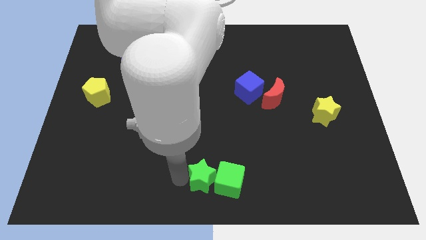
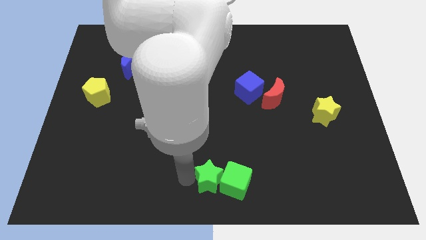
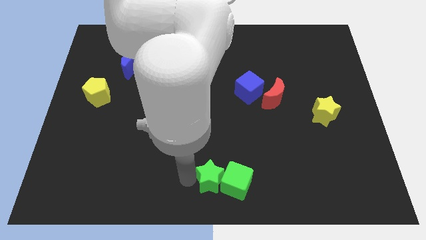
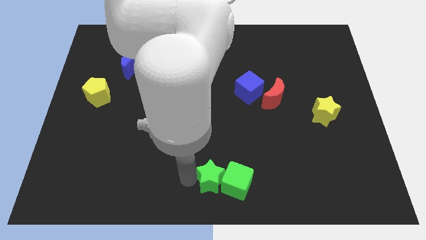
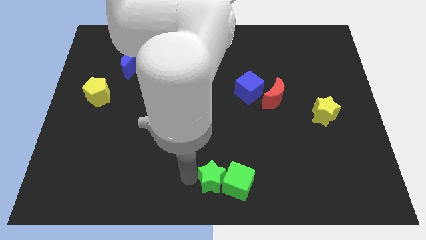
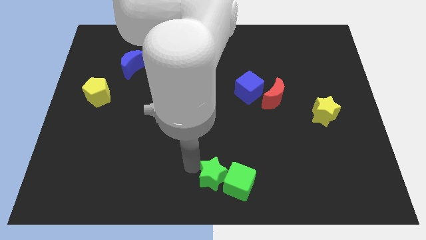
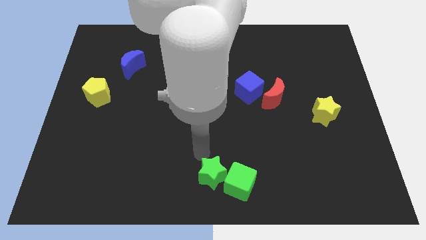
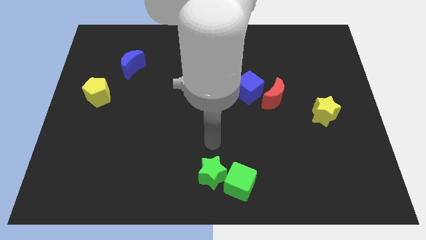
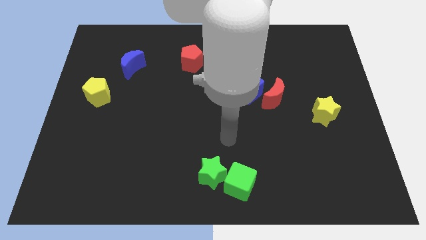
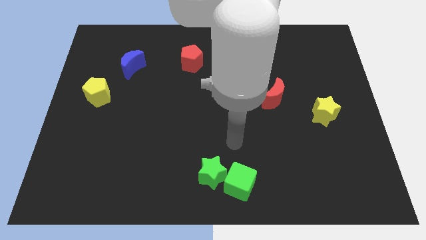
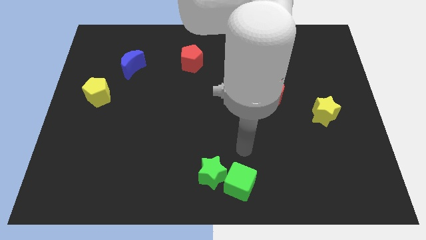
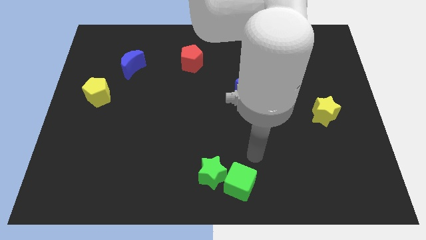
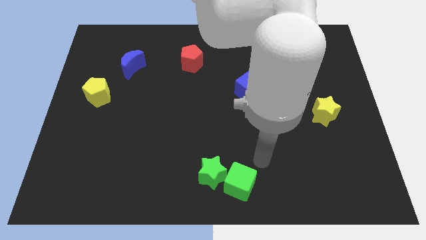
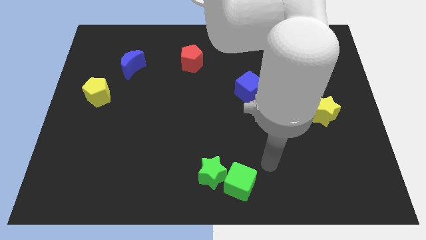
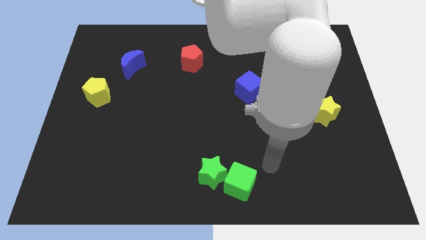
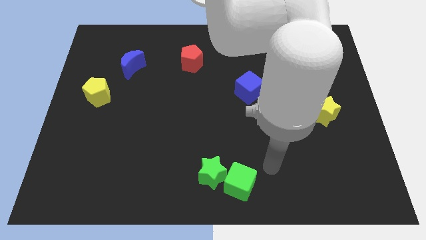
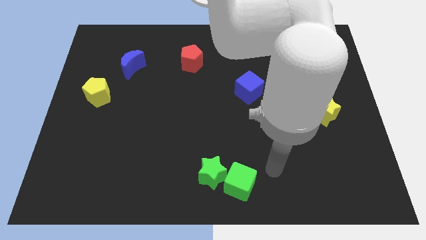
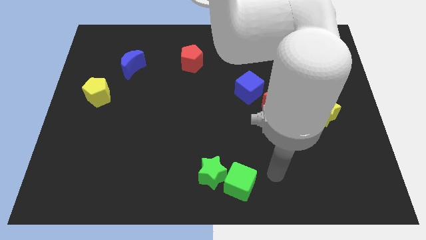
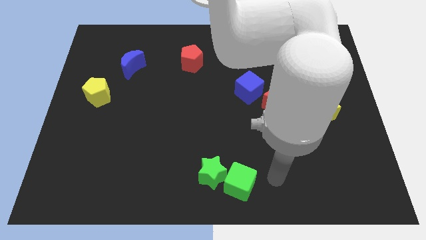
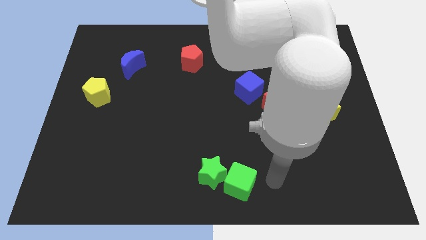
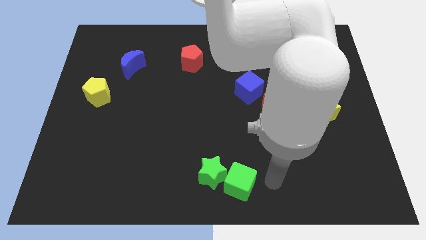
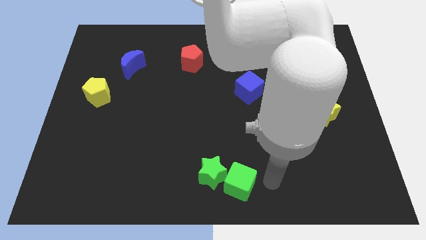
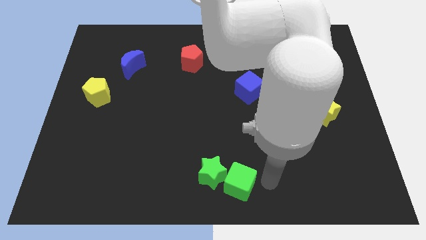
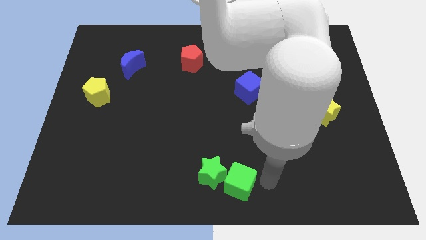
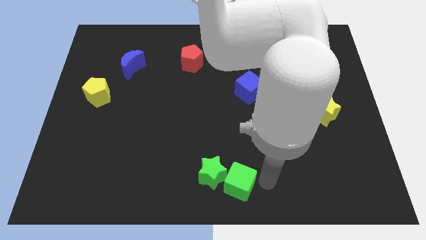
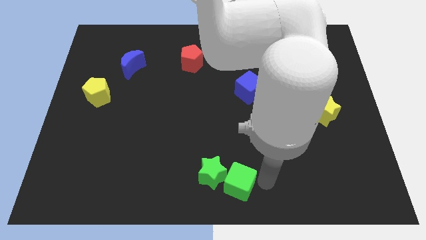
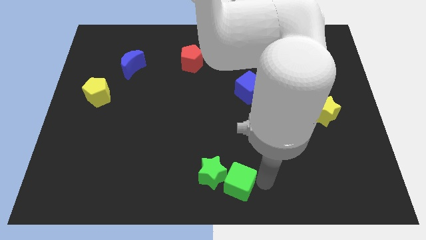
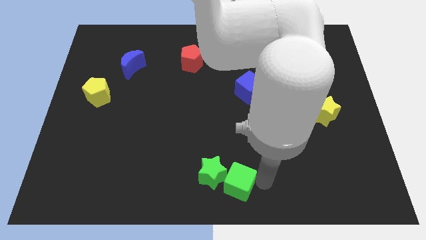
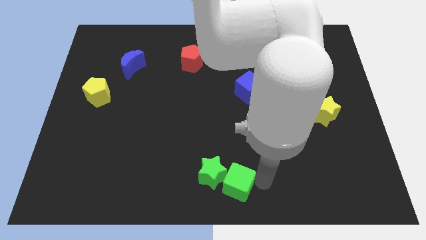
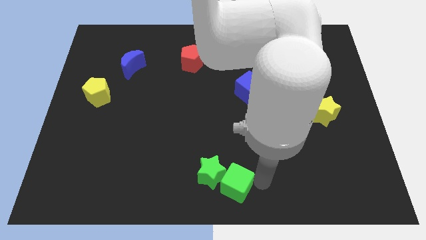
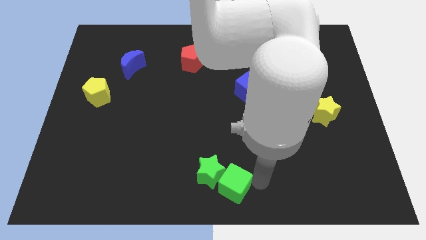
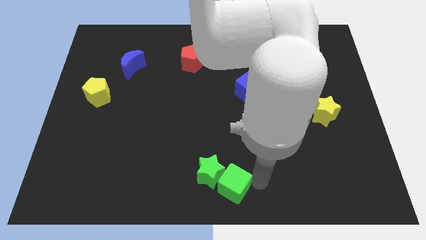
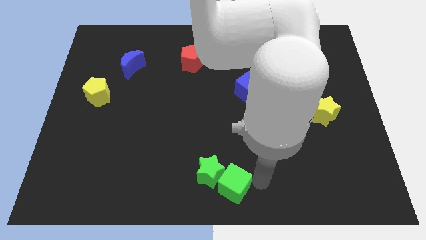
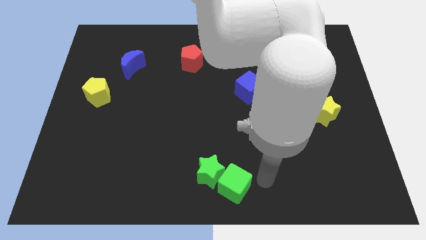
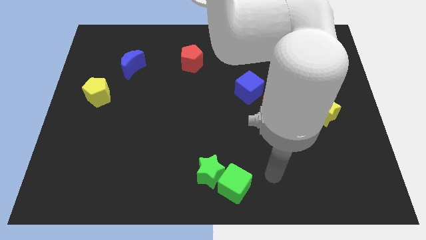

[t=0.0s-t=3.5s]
move green blocks to the bottom centre of the board

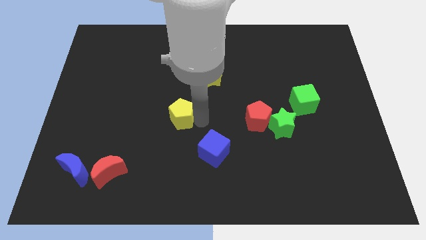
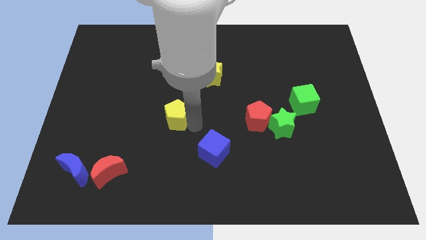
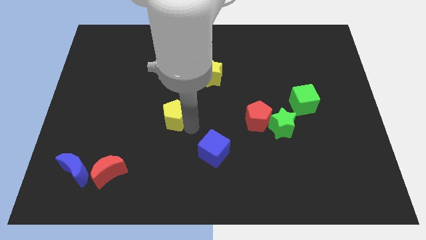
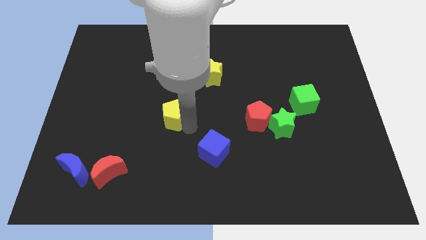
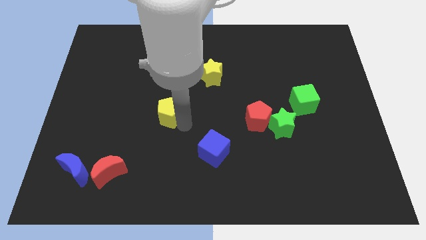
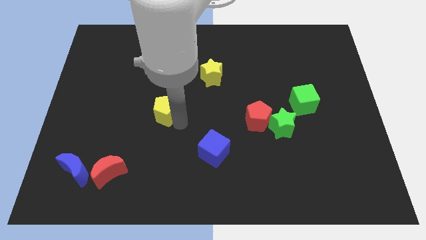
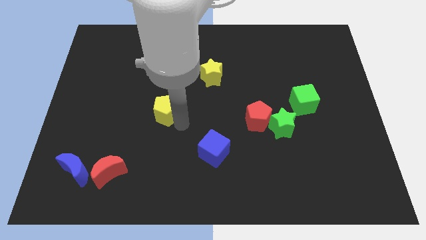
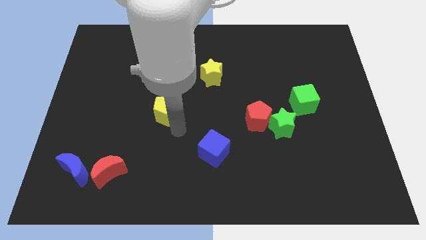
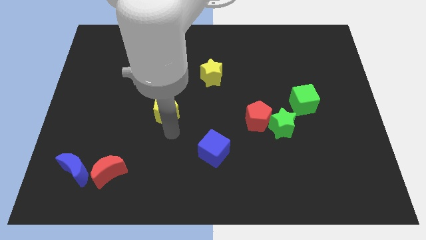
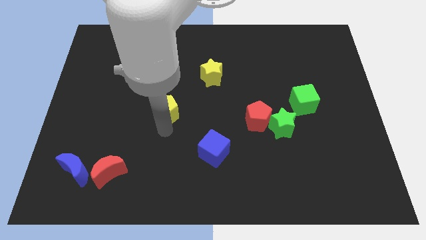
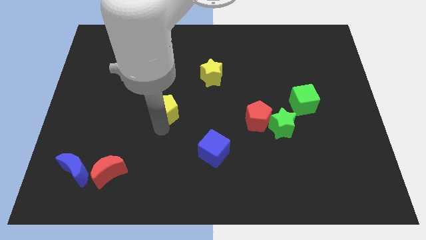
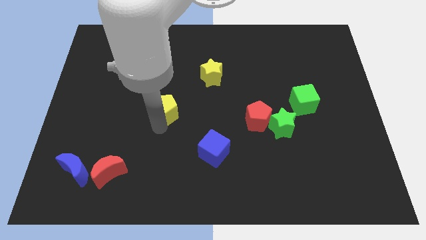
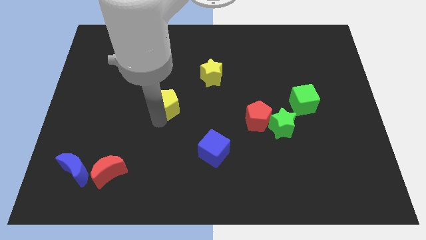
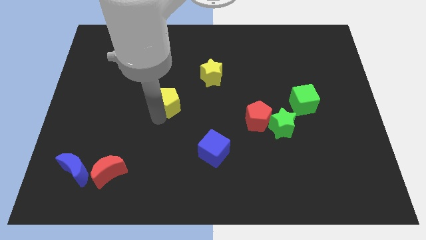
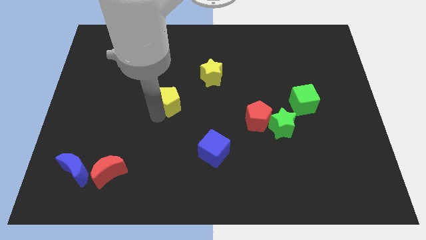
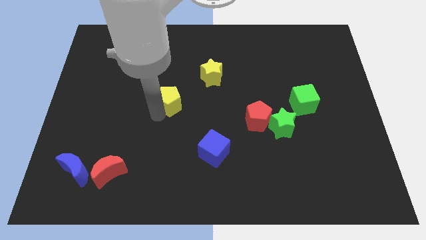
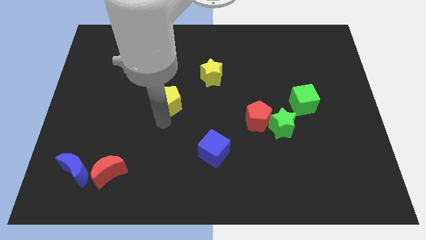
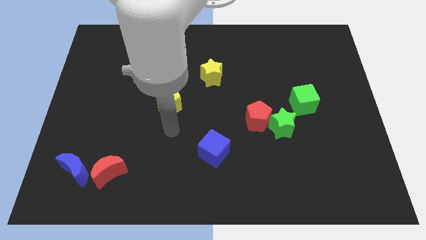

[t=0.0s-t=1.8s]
move yellow pentagon to the right center of the board

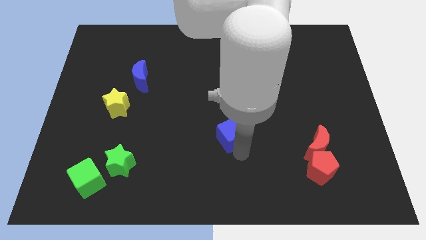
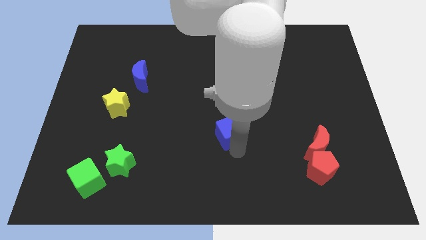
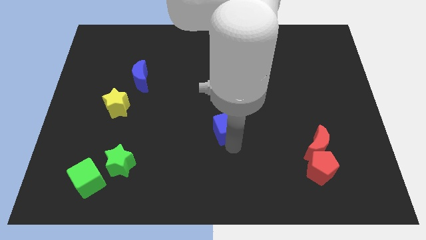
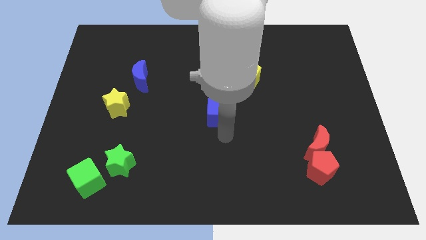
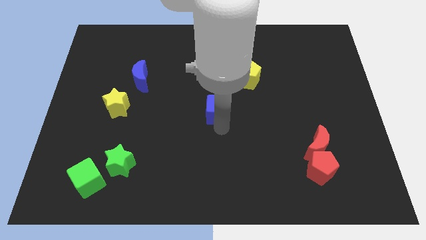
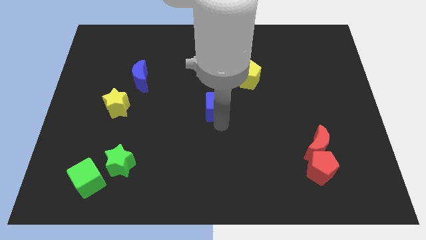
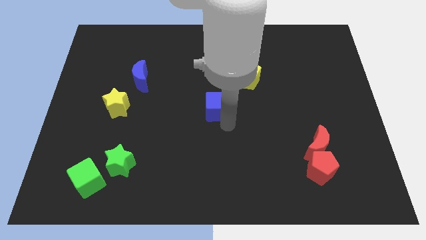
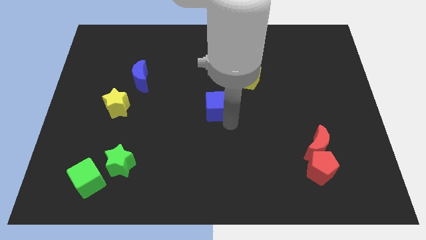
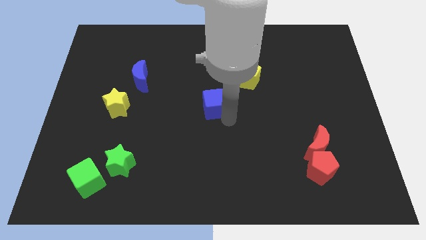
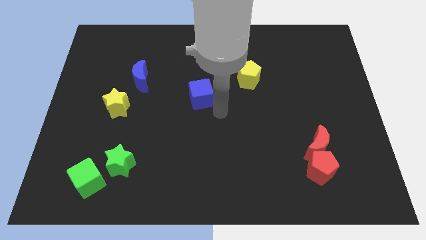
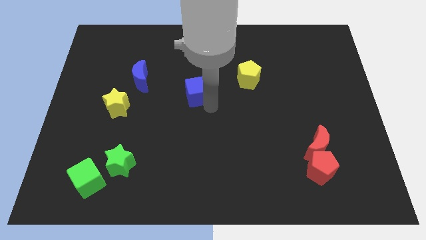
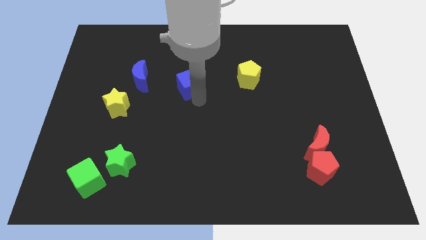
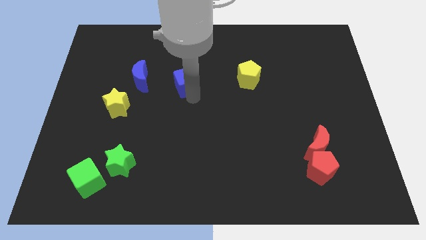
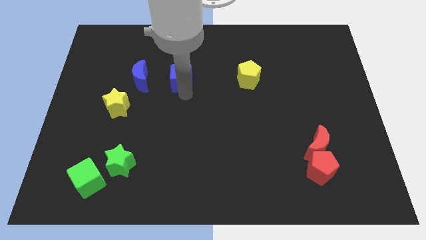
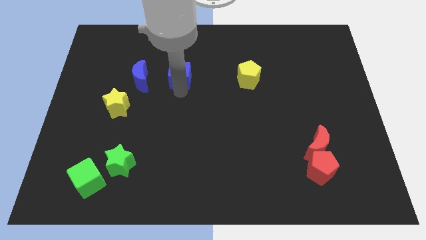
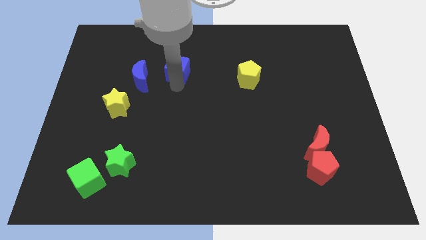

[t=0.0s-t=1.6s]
place the bleu cube to the right of blue moon

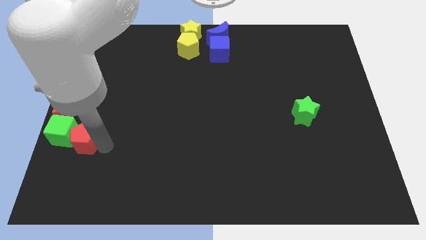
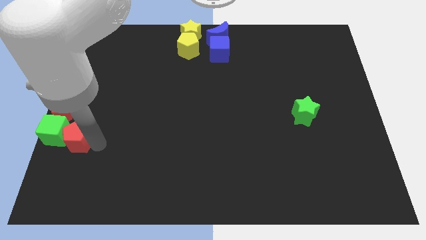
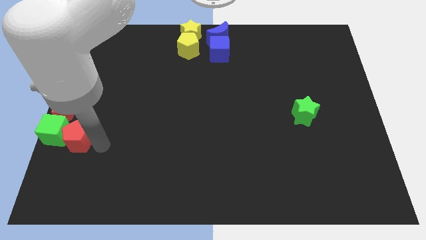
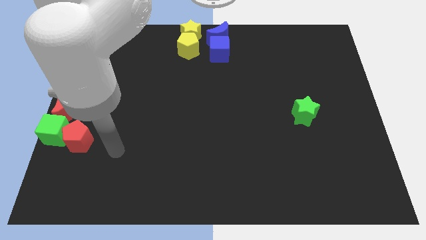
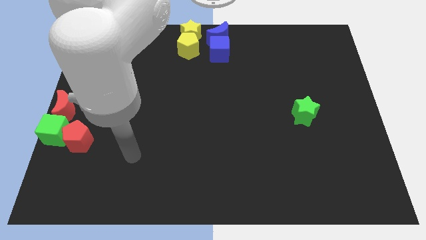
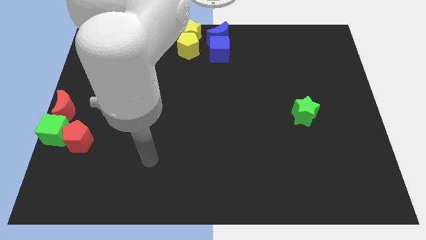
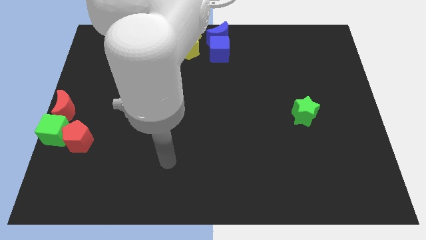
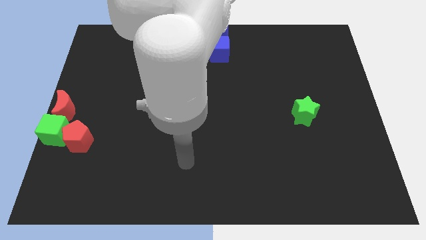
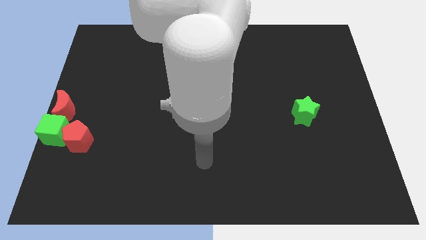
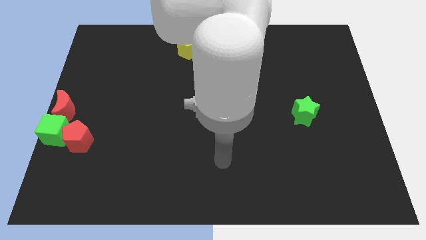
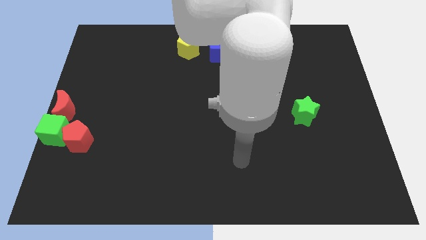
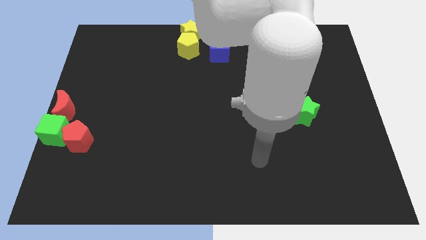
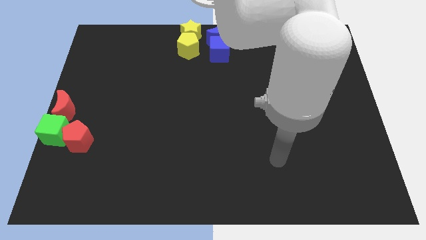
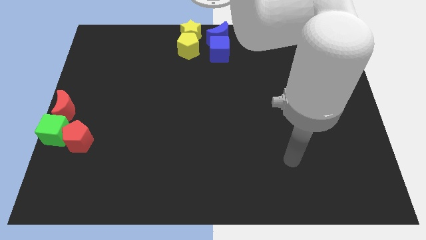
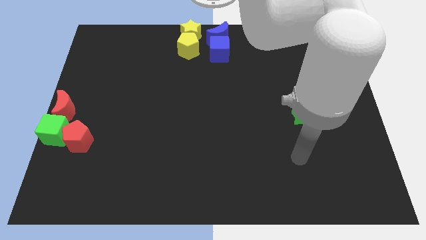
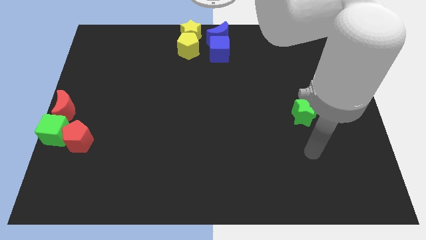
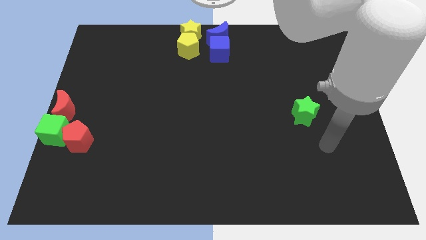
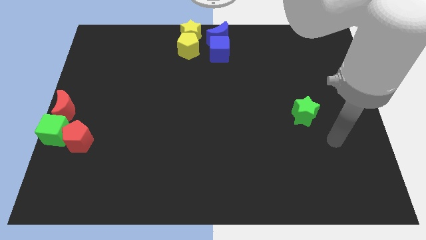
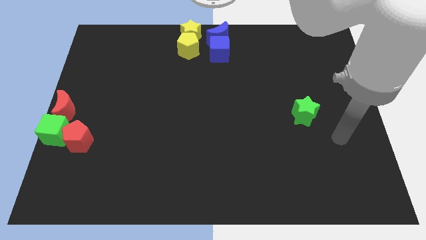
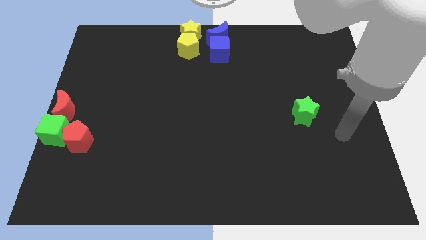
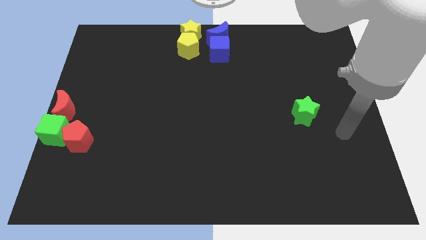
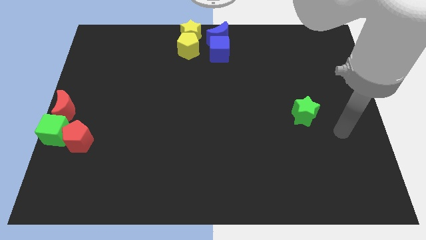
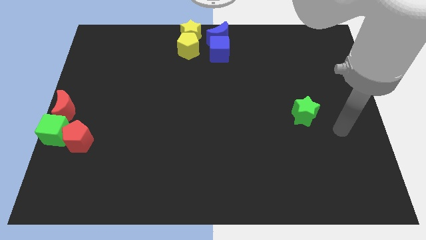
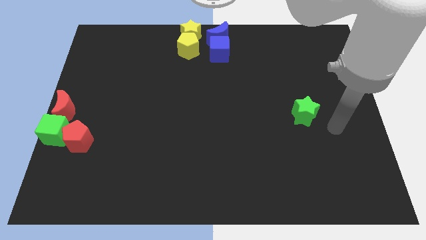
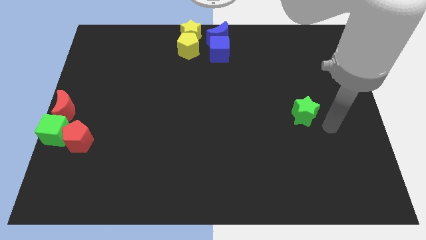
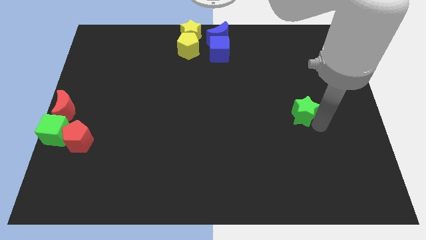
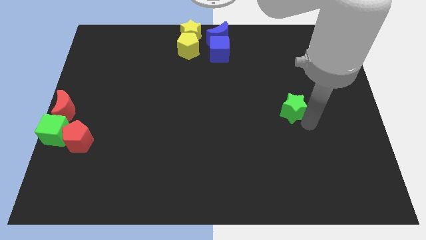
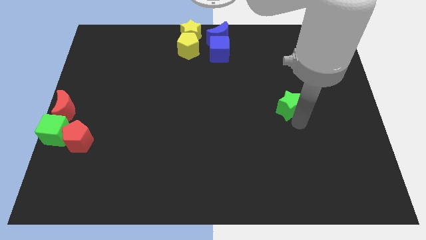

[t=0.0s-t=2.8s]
point your arm below green star
